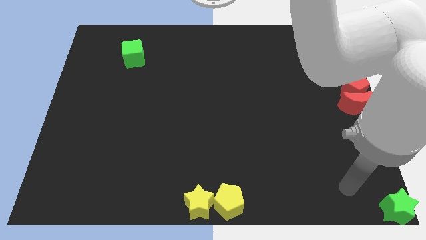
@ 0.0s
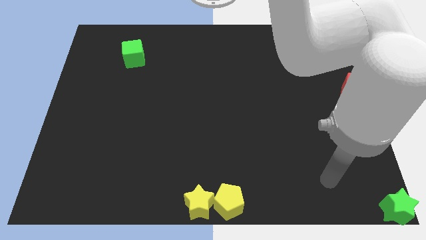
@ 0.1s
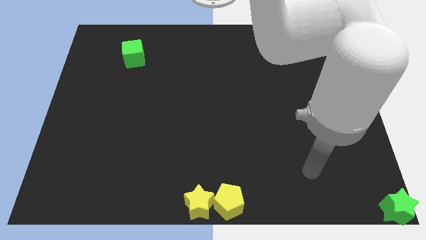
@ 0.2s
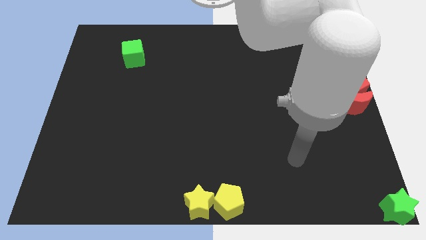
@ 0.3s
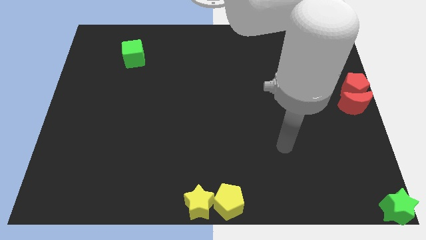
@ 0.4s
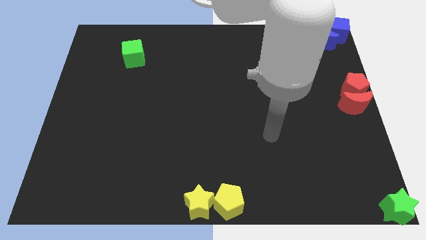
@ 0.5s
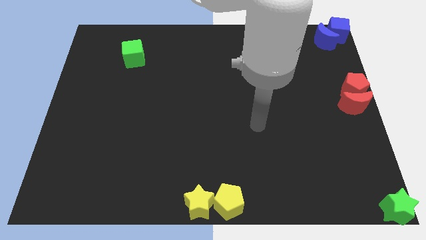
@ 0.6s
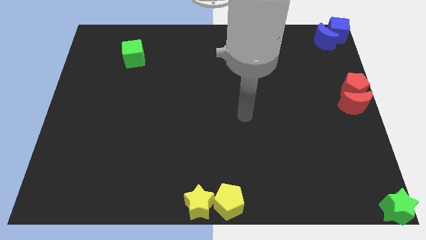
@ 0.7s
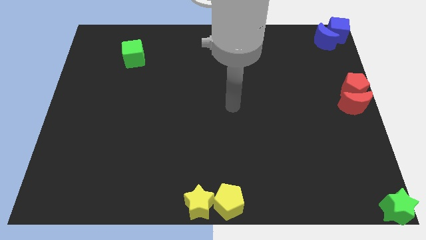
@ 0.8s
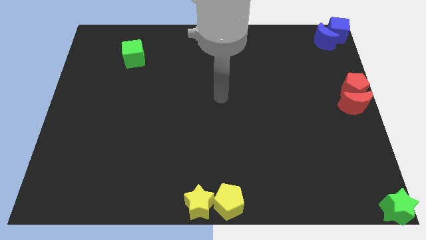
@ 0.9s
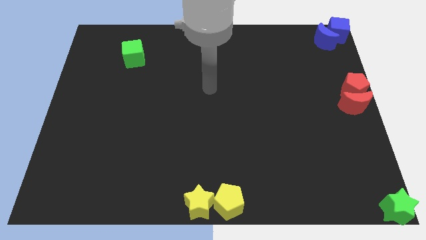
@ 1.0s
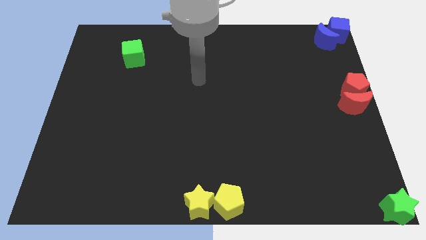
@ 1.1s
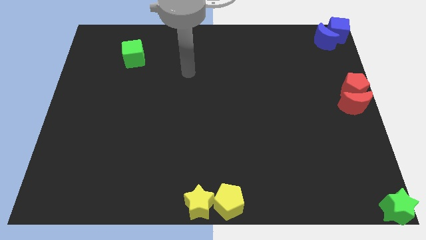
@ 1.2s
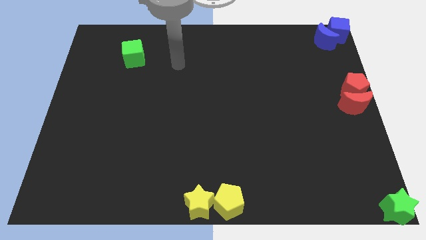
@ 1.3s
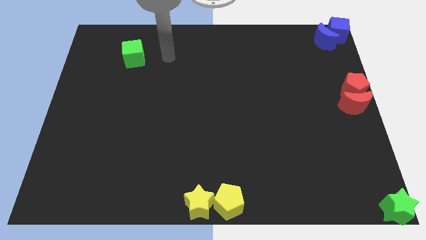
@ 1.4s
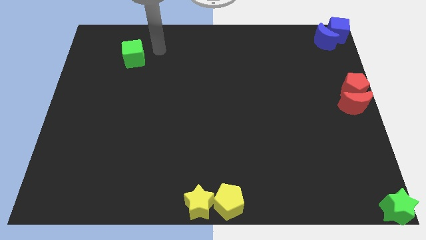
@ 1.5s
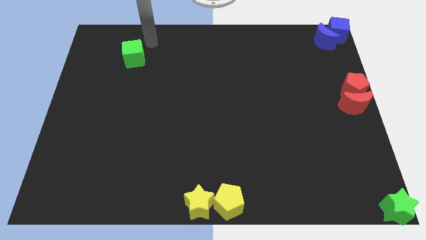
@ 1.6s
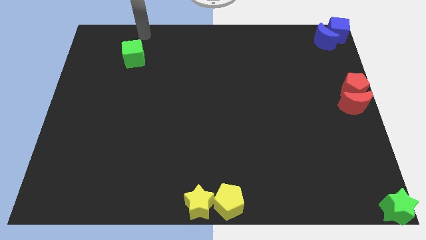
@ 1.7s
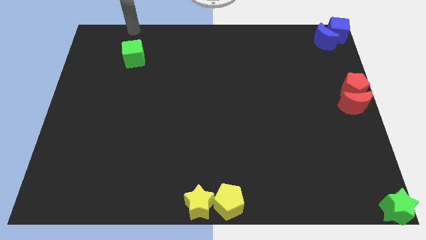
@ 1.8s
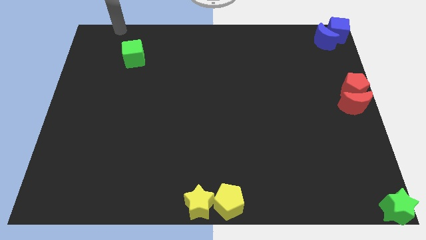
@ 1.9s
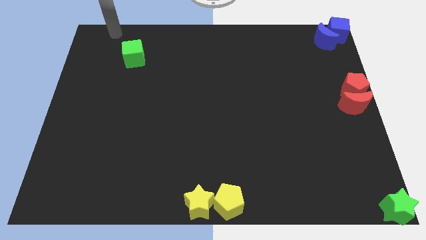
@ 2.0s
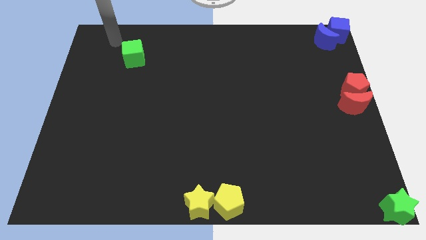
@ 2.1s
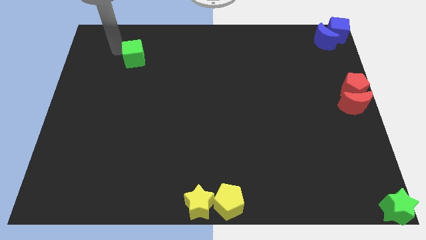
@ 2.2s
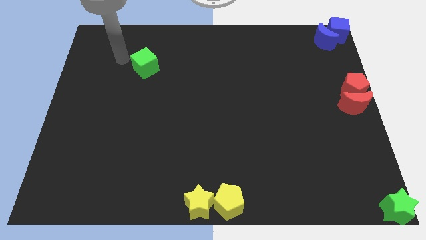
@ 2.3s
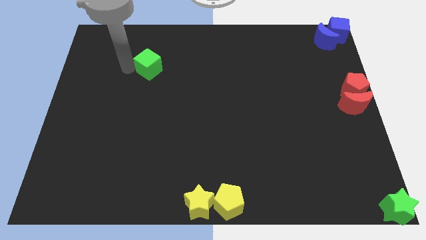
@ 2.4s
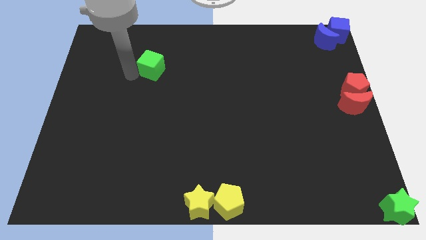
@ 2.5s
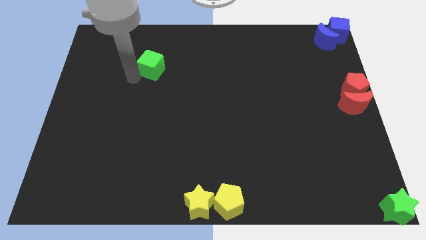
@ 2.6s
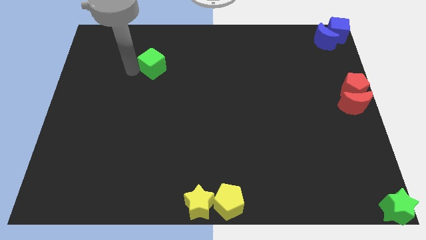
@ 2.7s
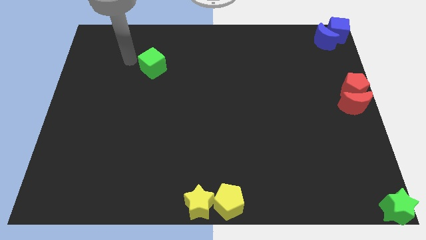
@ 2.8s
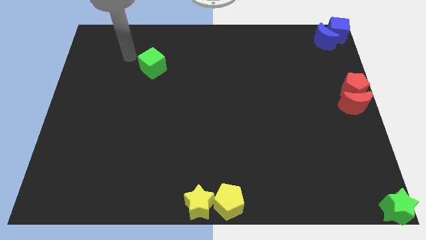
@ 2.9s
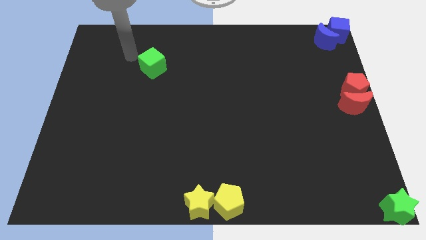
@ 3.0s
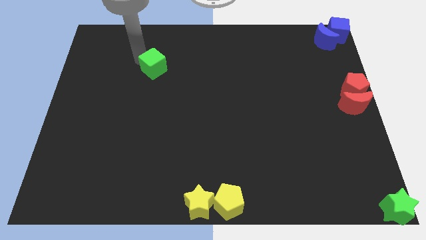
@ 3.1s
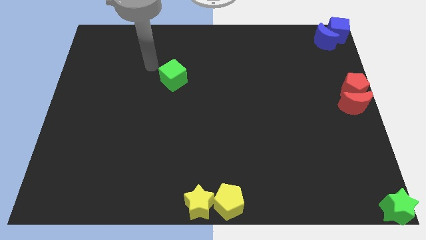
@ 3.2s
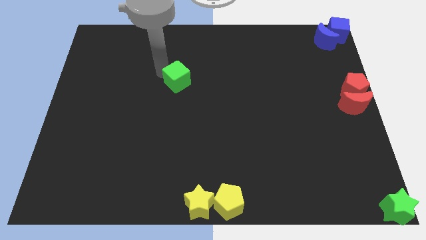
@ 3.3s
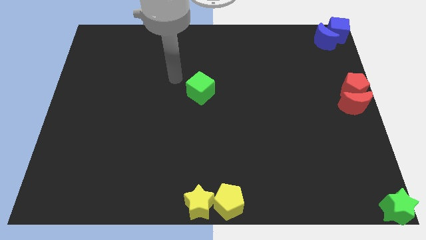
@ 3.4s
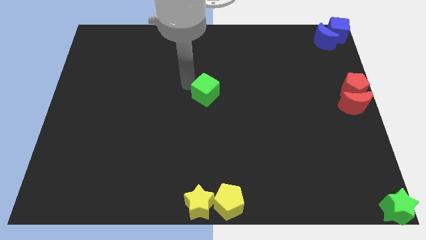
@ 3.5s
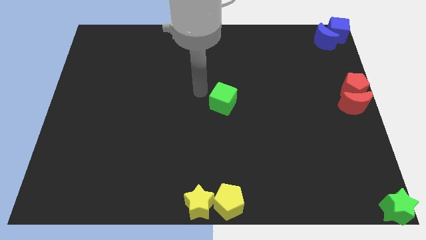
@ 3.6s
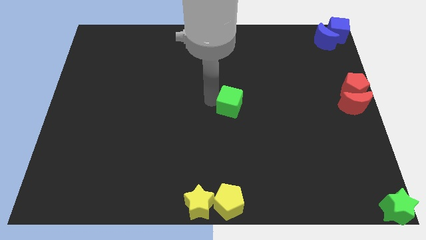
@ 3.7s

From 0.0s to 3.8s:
place the green cube at the center of the board

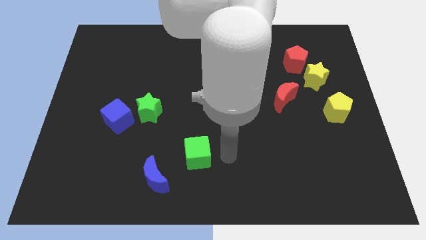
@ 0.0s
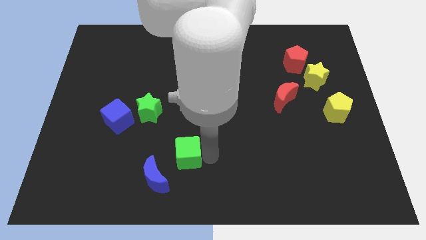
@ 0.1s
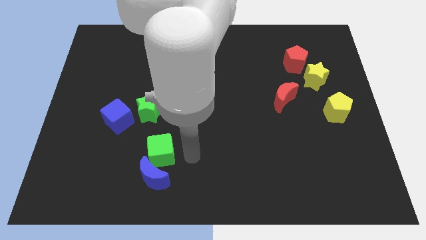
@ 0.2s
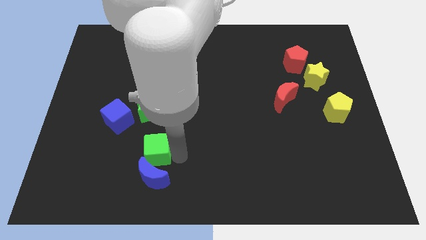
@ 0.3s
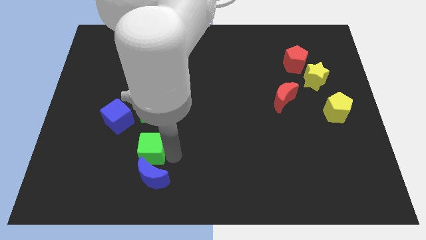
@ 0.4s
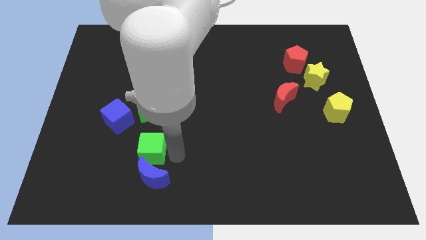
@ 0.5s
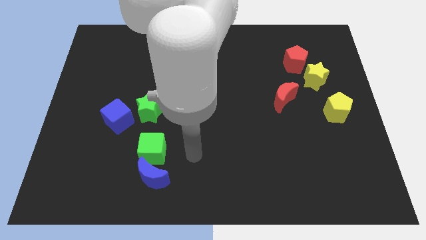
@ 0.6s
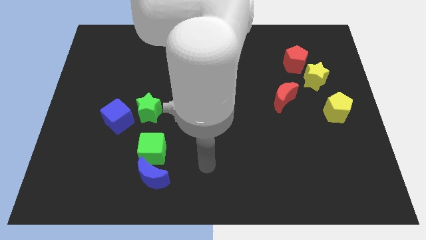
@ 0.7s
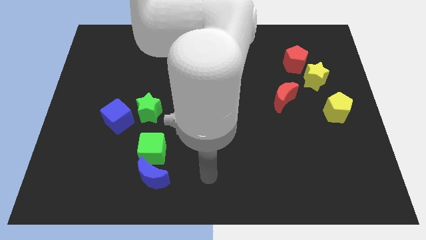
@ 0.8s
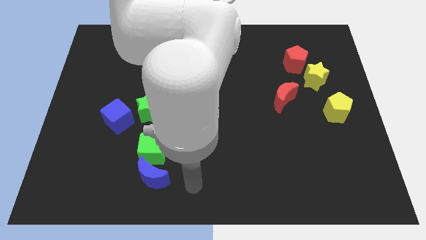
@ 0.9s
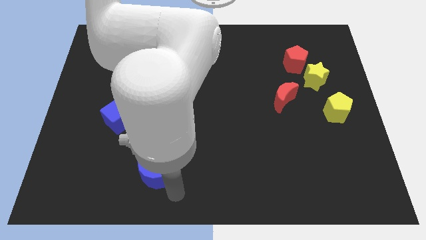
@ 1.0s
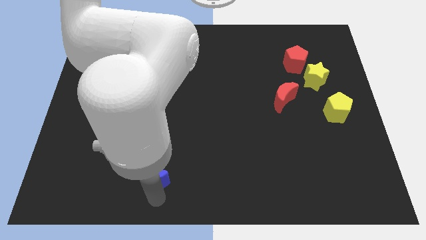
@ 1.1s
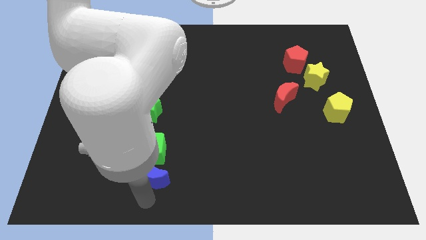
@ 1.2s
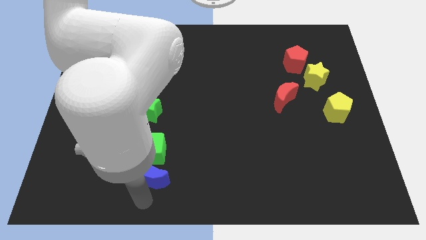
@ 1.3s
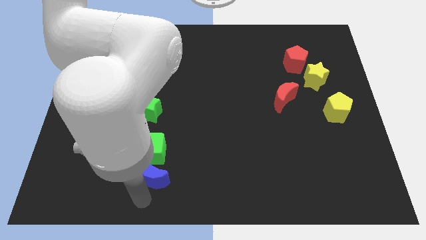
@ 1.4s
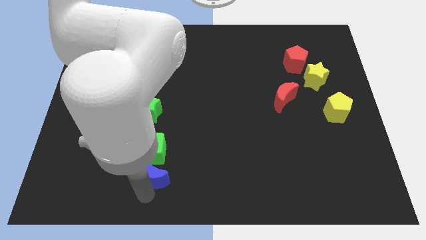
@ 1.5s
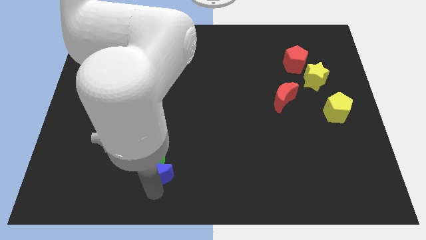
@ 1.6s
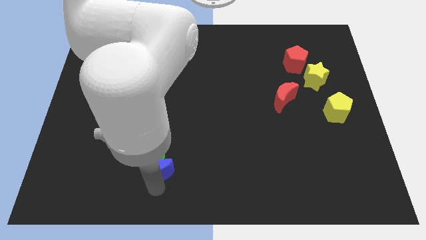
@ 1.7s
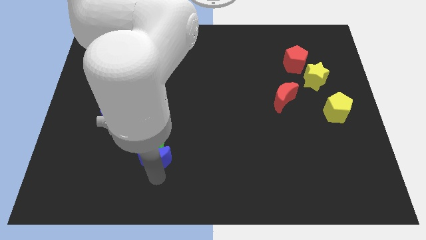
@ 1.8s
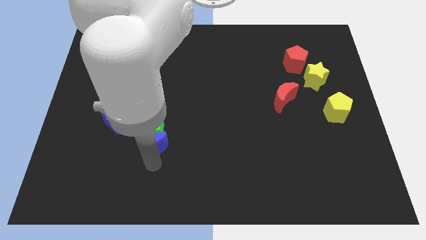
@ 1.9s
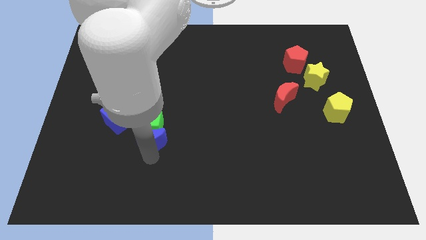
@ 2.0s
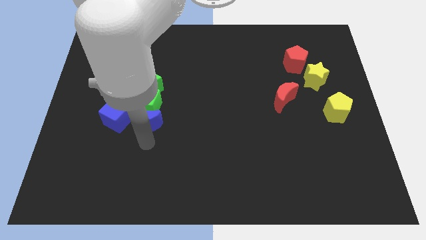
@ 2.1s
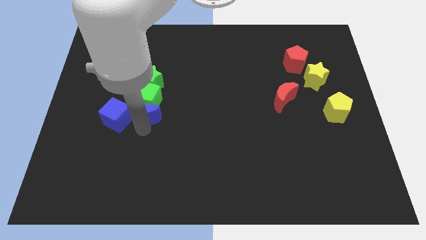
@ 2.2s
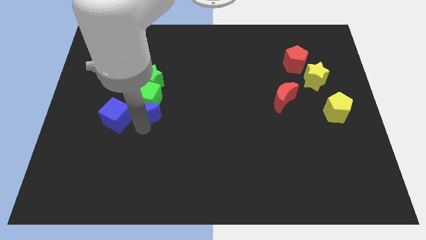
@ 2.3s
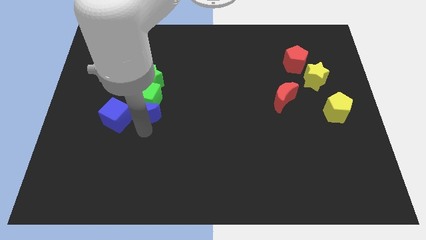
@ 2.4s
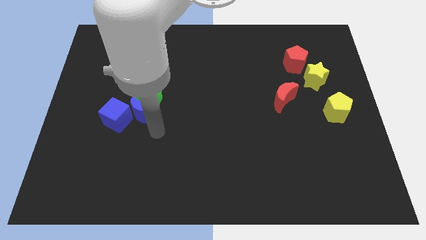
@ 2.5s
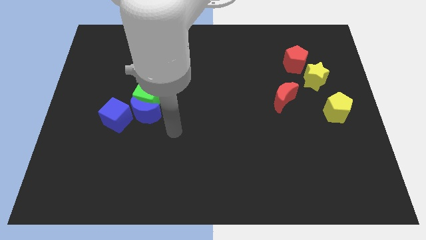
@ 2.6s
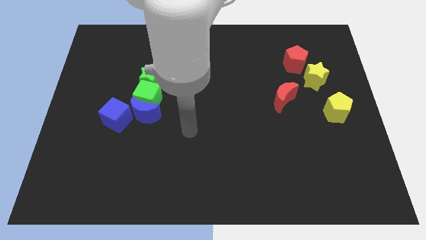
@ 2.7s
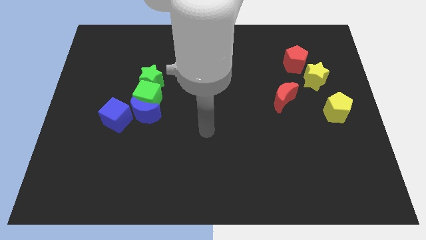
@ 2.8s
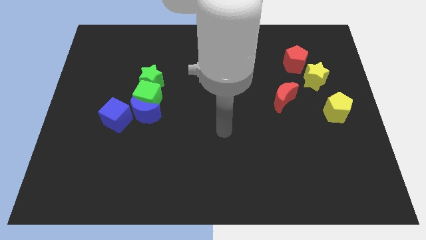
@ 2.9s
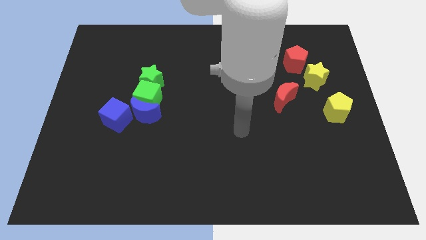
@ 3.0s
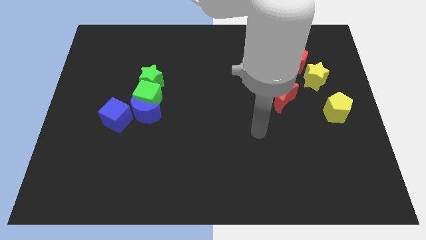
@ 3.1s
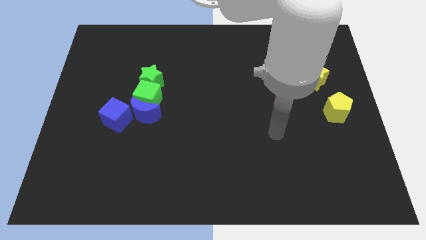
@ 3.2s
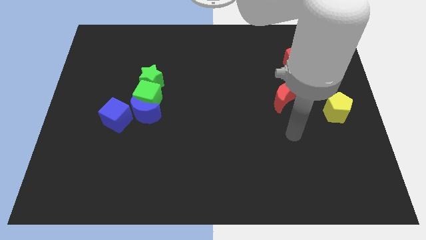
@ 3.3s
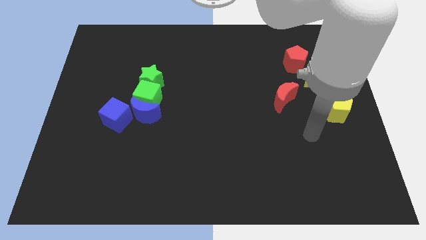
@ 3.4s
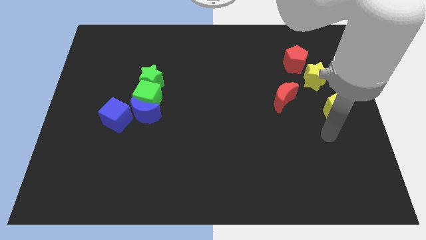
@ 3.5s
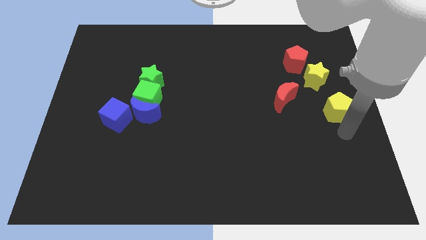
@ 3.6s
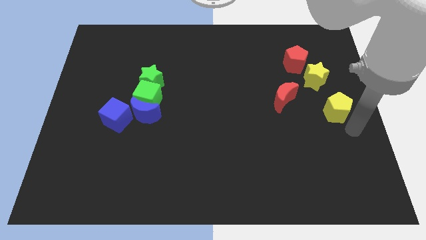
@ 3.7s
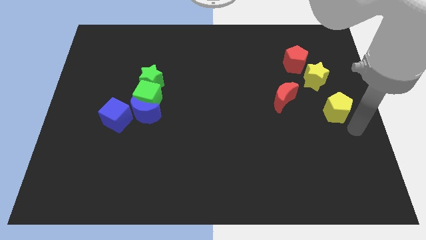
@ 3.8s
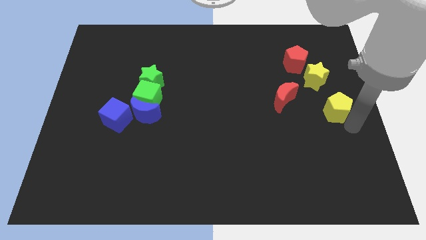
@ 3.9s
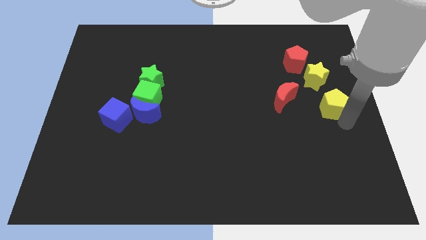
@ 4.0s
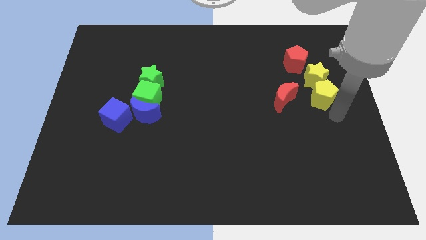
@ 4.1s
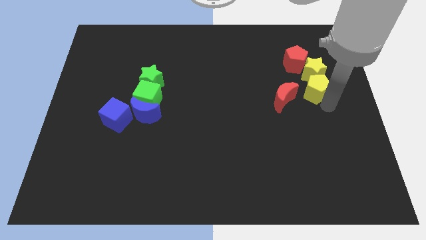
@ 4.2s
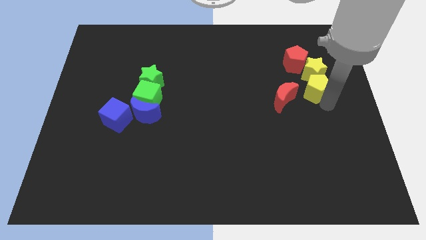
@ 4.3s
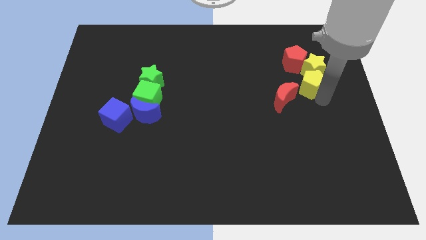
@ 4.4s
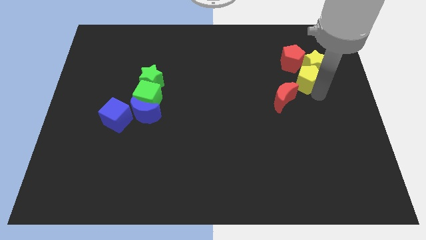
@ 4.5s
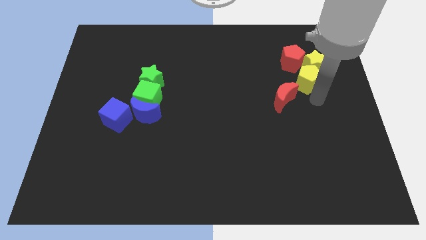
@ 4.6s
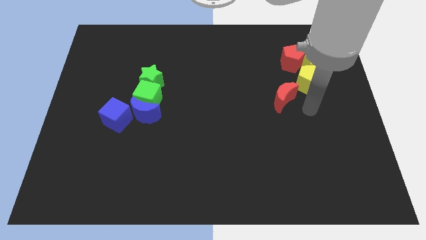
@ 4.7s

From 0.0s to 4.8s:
push the yellow pentagon into the yellow star

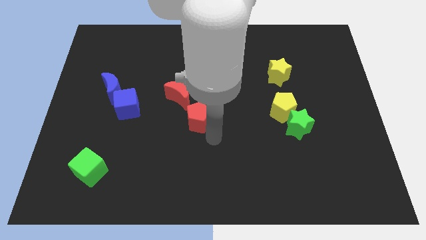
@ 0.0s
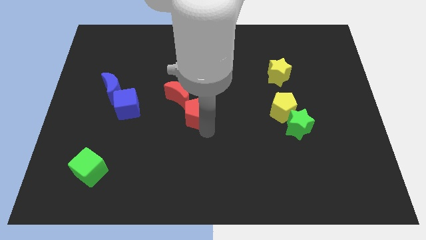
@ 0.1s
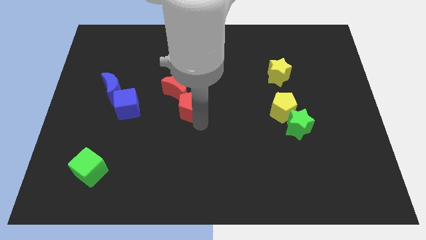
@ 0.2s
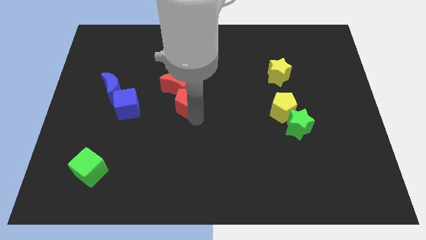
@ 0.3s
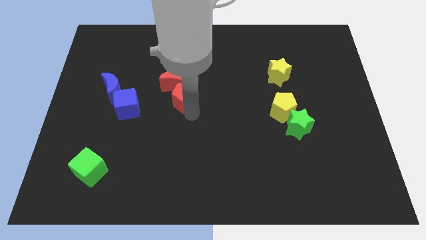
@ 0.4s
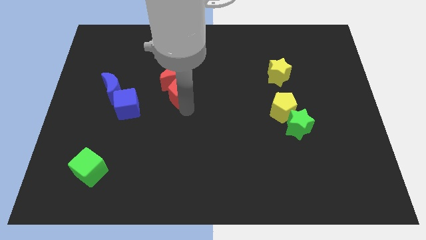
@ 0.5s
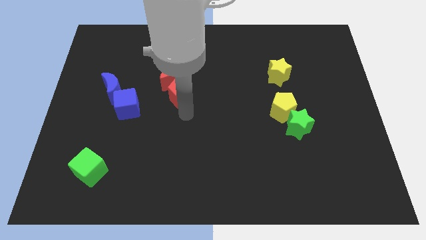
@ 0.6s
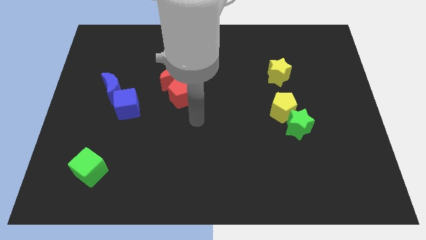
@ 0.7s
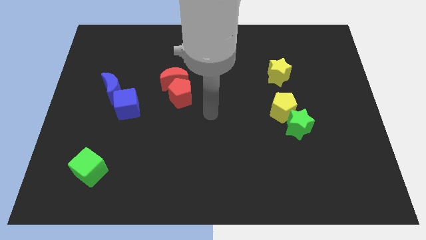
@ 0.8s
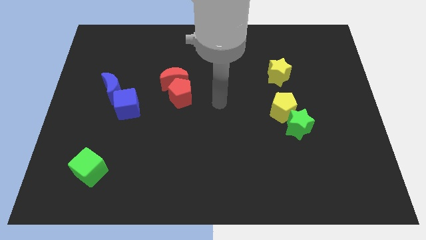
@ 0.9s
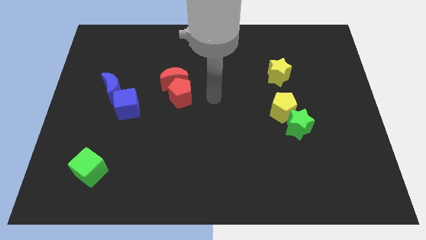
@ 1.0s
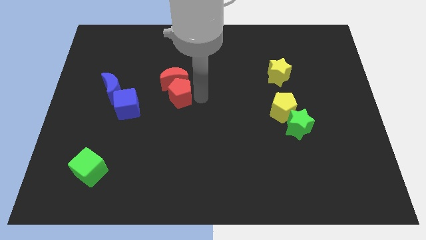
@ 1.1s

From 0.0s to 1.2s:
push red pentagon towards upward
